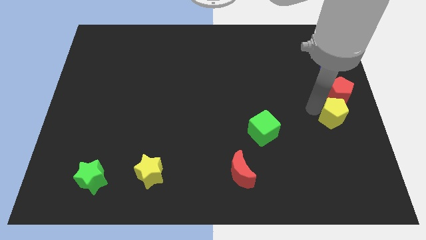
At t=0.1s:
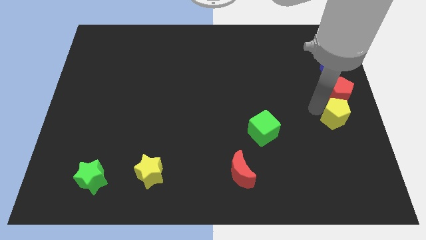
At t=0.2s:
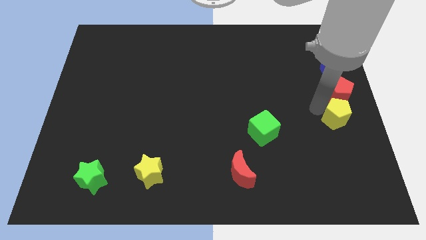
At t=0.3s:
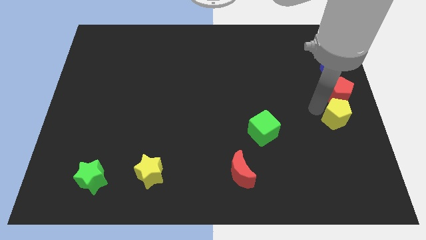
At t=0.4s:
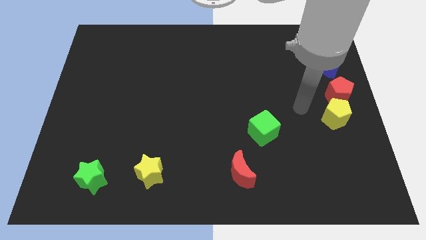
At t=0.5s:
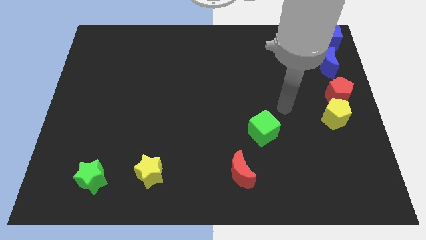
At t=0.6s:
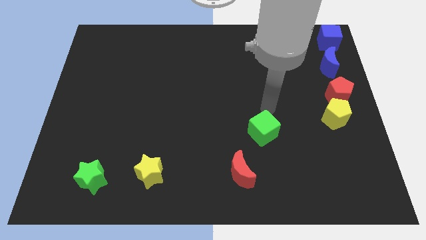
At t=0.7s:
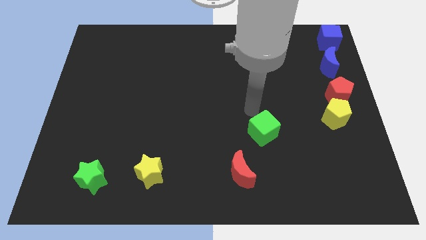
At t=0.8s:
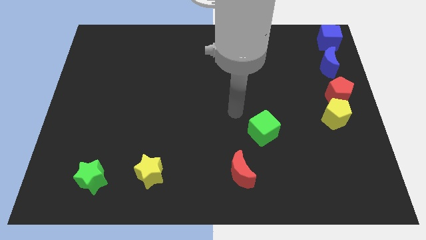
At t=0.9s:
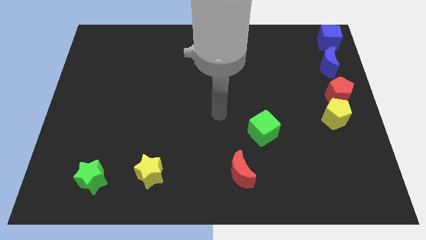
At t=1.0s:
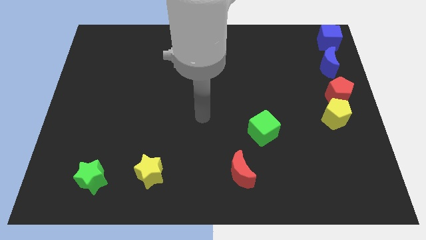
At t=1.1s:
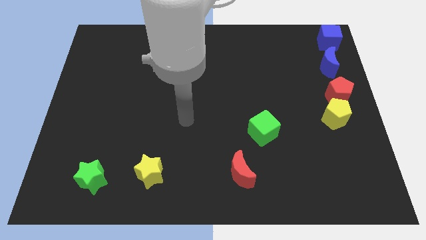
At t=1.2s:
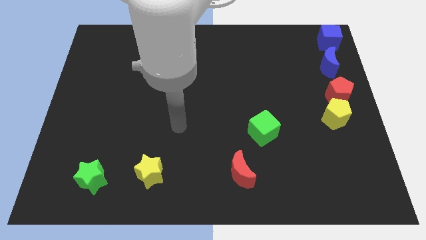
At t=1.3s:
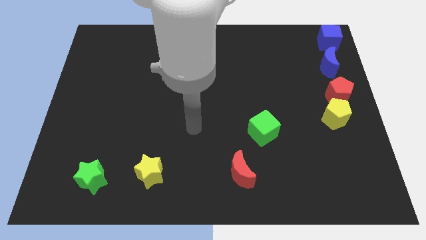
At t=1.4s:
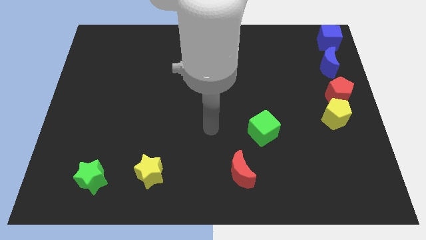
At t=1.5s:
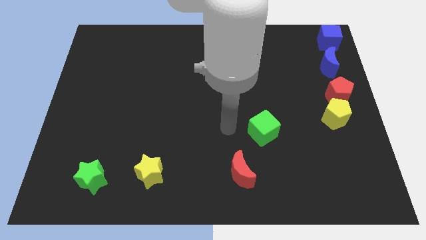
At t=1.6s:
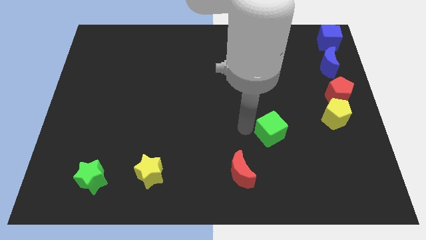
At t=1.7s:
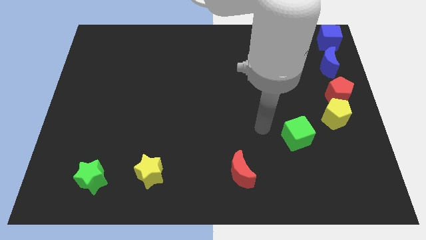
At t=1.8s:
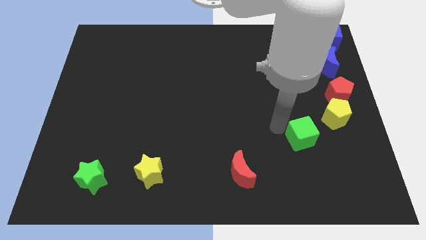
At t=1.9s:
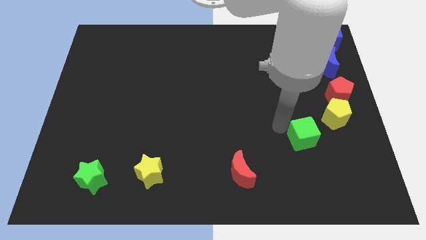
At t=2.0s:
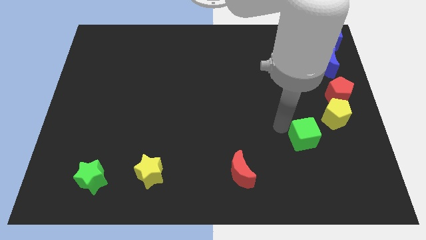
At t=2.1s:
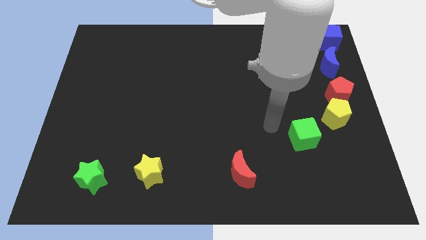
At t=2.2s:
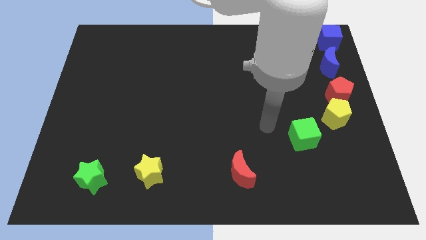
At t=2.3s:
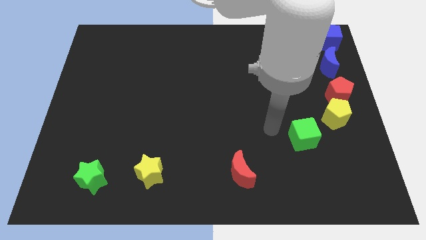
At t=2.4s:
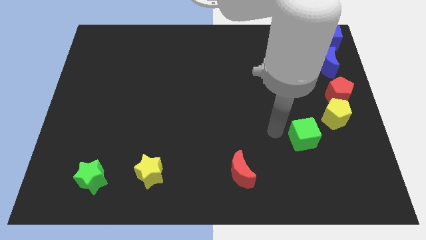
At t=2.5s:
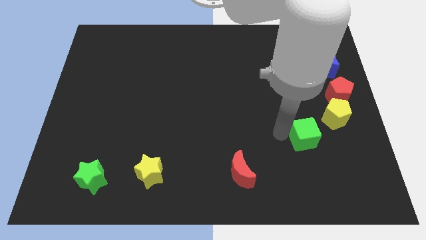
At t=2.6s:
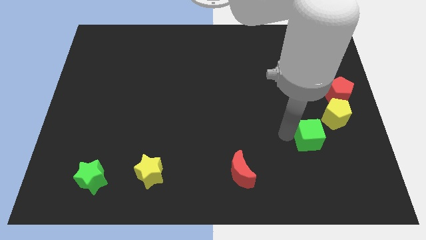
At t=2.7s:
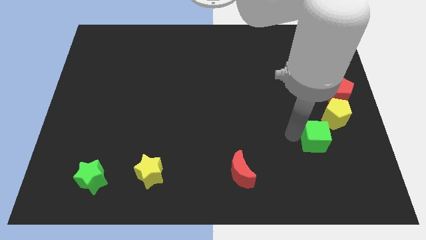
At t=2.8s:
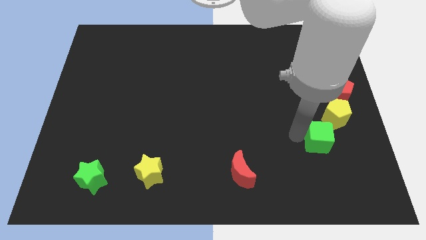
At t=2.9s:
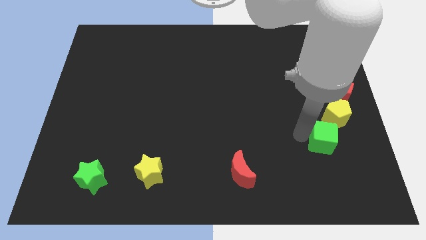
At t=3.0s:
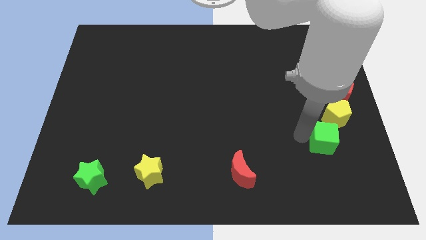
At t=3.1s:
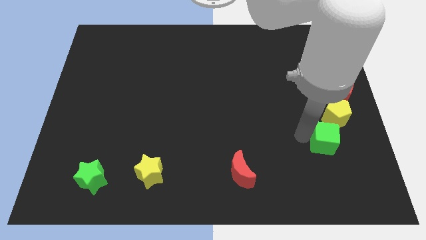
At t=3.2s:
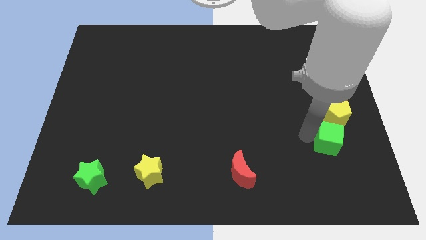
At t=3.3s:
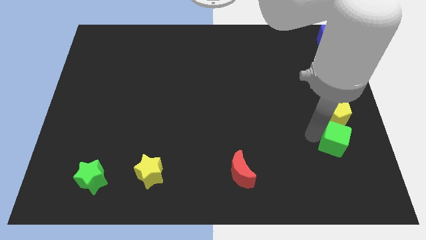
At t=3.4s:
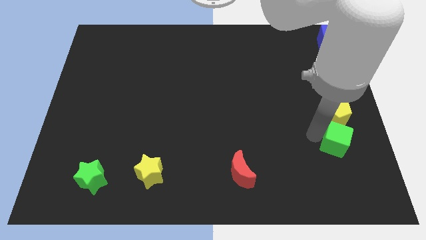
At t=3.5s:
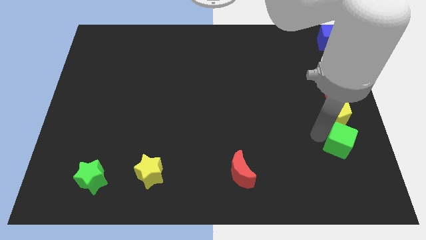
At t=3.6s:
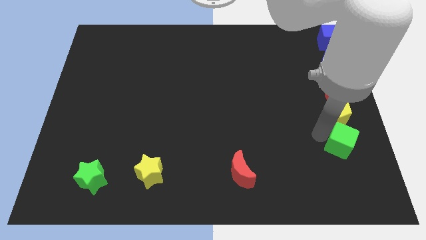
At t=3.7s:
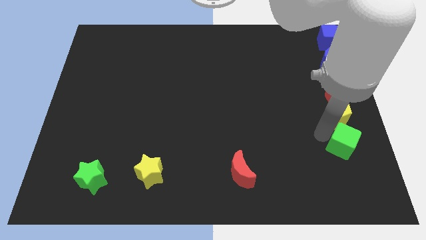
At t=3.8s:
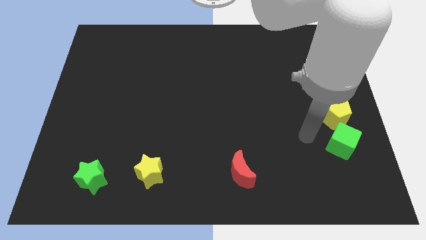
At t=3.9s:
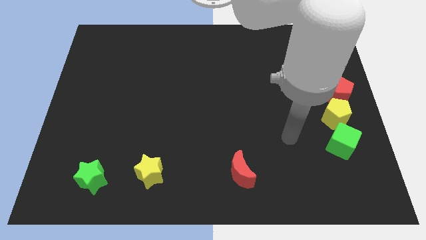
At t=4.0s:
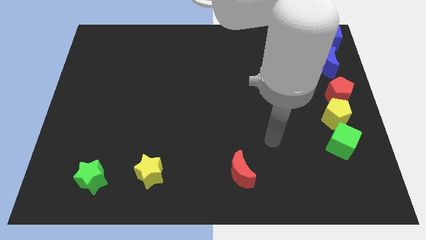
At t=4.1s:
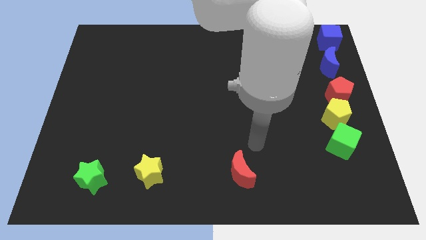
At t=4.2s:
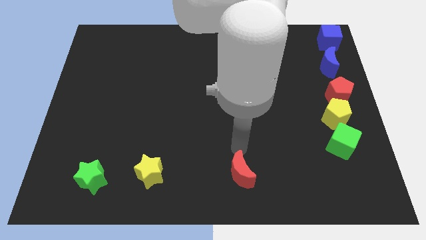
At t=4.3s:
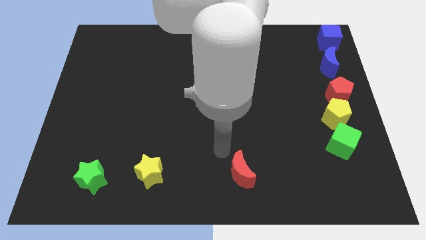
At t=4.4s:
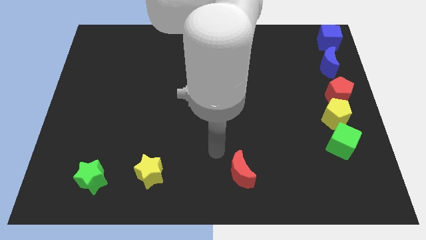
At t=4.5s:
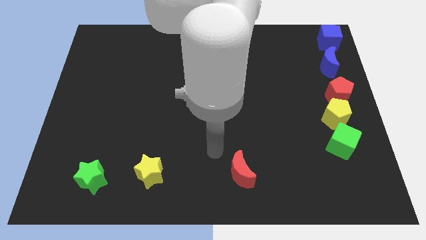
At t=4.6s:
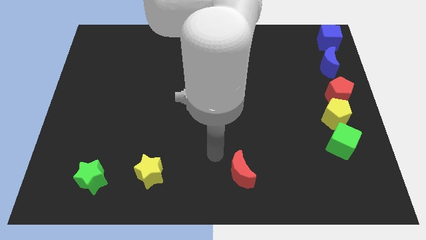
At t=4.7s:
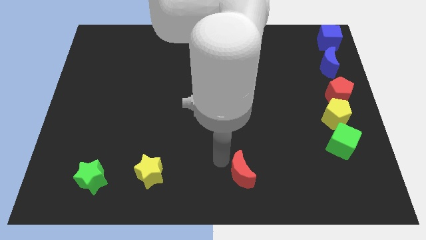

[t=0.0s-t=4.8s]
place the green cube below the yellow pentagon

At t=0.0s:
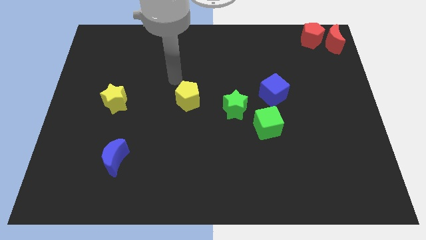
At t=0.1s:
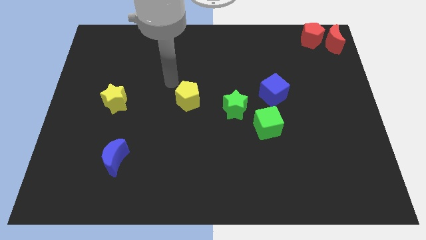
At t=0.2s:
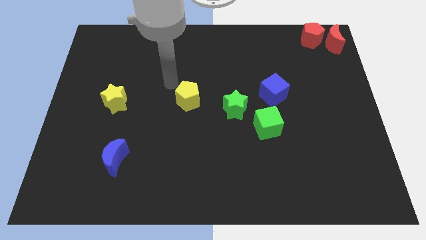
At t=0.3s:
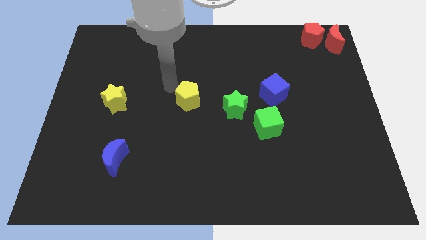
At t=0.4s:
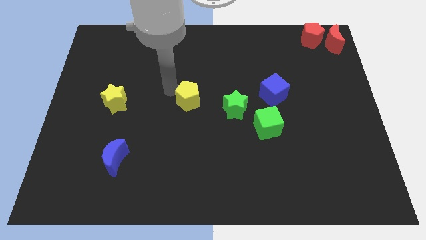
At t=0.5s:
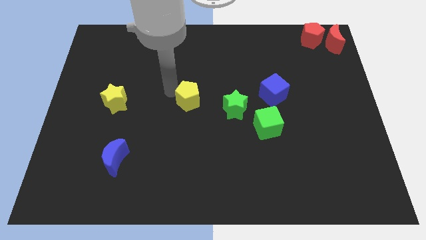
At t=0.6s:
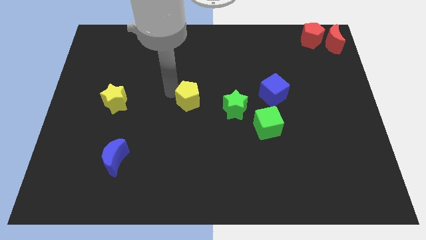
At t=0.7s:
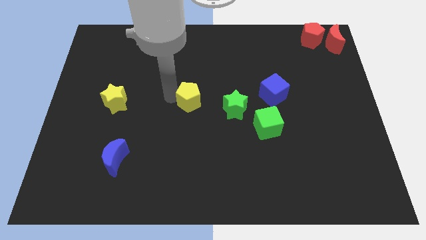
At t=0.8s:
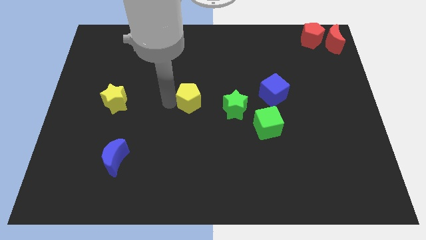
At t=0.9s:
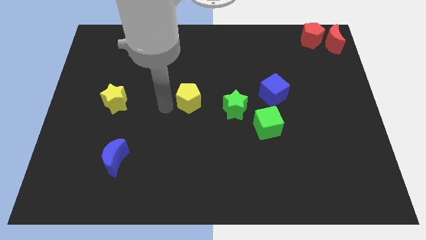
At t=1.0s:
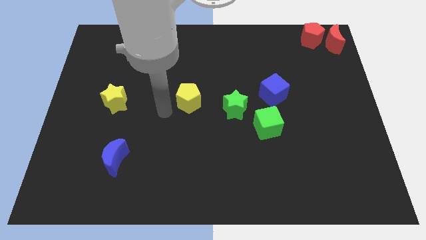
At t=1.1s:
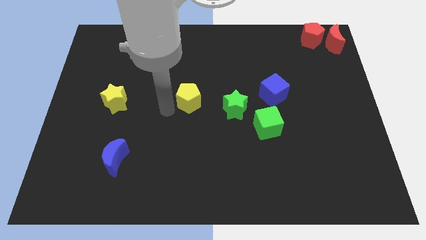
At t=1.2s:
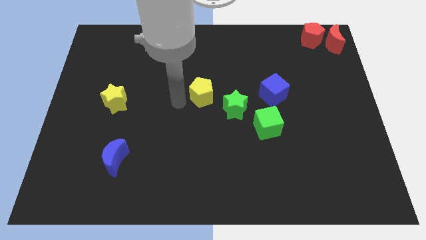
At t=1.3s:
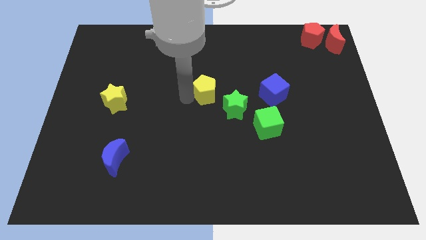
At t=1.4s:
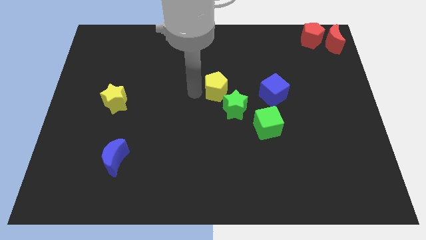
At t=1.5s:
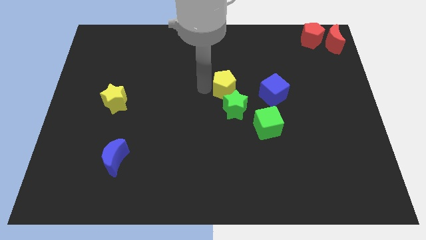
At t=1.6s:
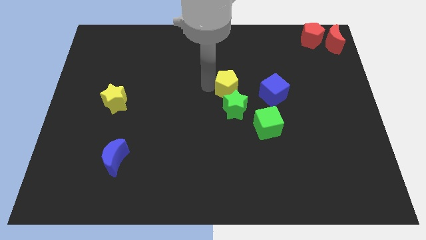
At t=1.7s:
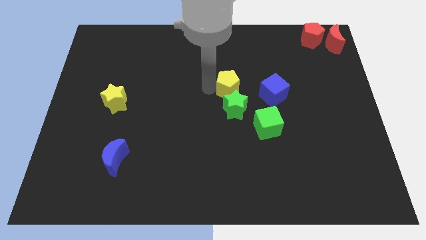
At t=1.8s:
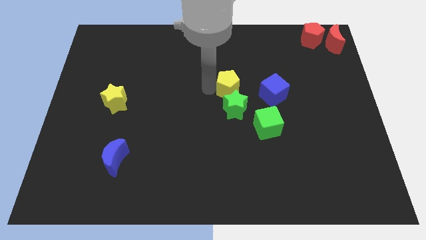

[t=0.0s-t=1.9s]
move the yellow pentagon above the green star

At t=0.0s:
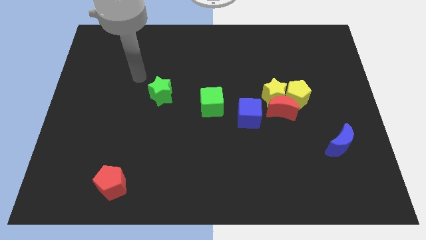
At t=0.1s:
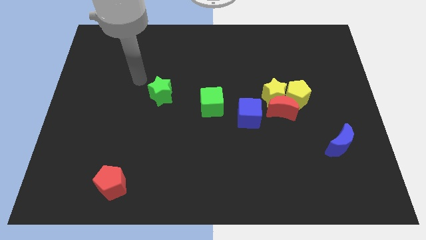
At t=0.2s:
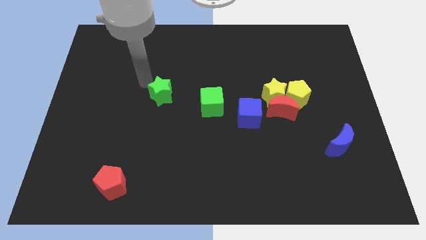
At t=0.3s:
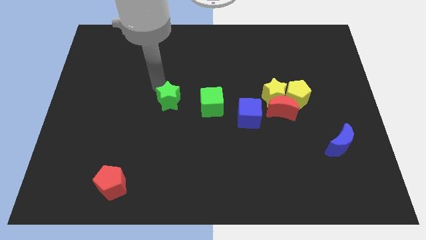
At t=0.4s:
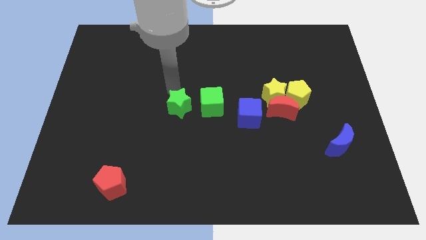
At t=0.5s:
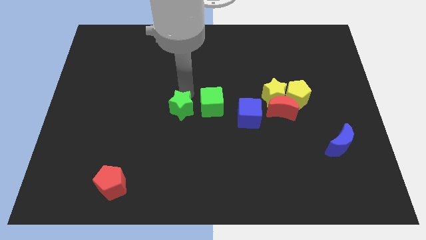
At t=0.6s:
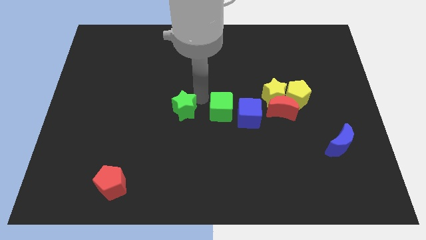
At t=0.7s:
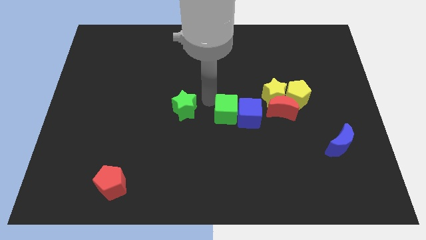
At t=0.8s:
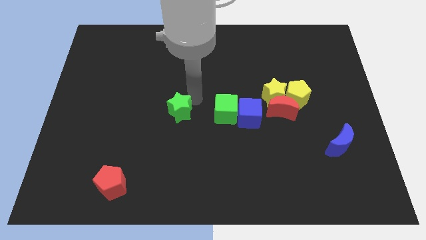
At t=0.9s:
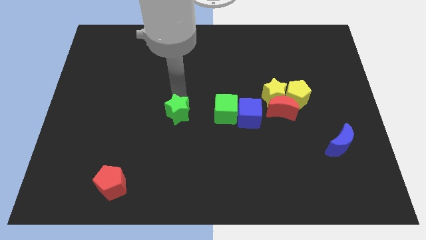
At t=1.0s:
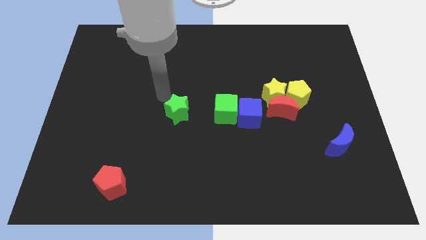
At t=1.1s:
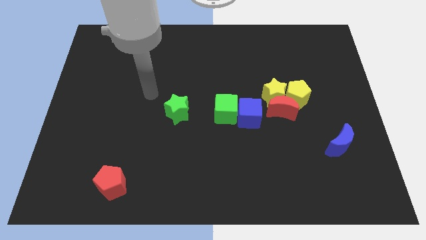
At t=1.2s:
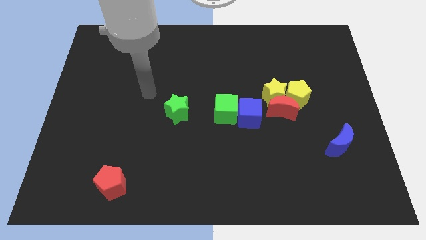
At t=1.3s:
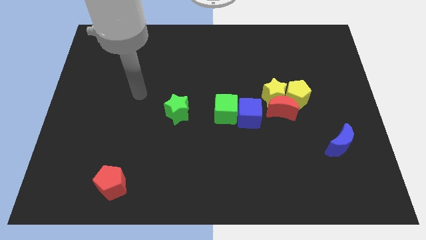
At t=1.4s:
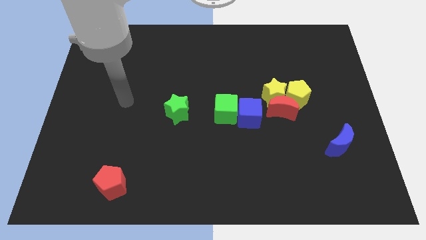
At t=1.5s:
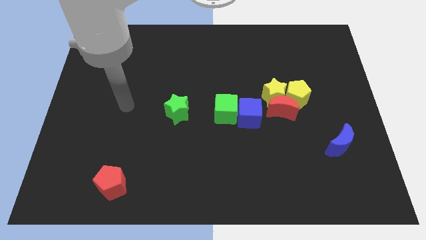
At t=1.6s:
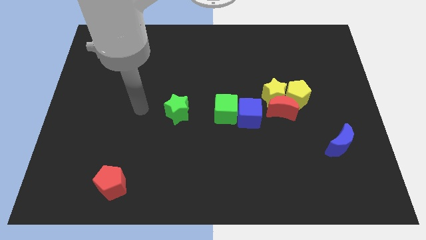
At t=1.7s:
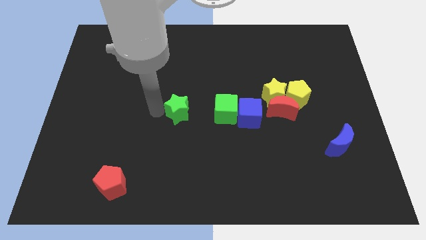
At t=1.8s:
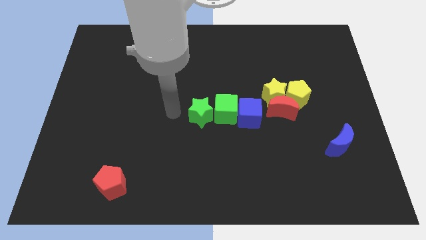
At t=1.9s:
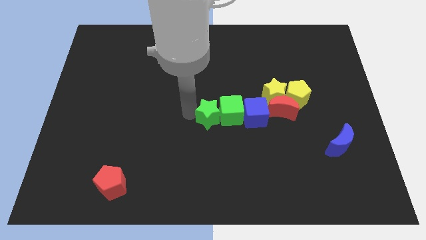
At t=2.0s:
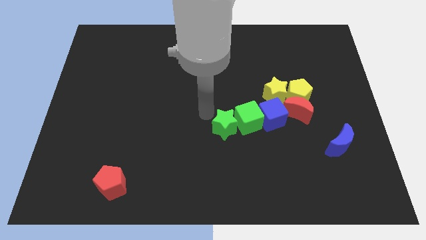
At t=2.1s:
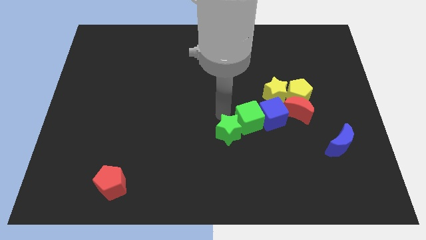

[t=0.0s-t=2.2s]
move green star close to green cube

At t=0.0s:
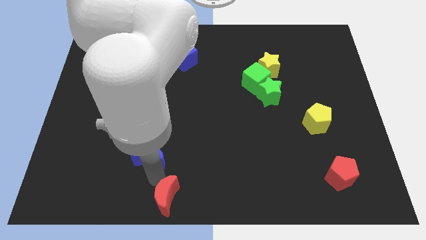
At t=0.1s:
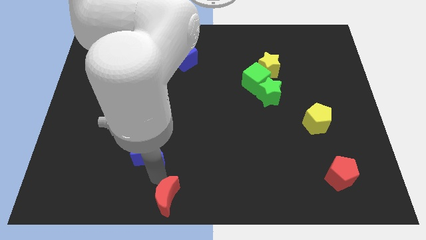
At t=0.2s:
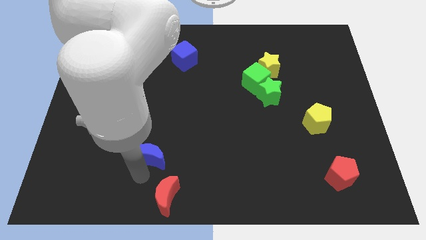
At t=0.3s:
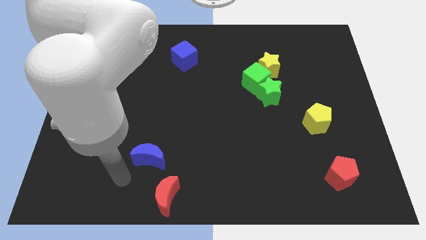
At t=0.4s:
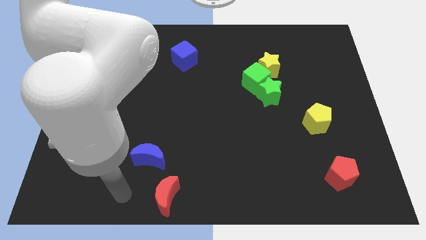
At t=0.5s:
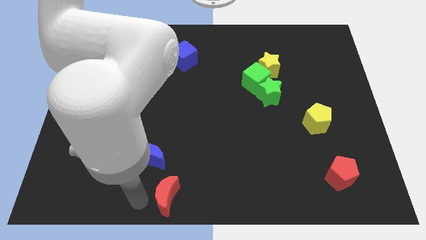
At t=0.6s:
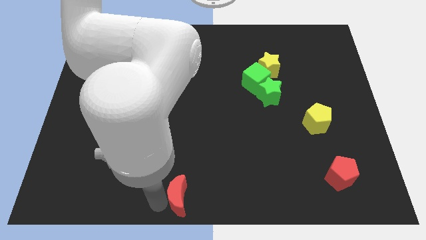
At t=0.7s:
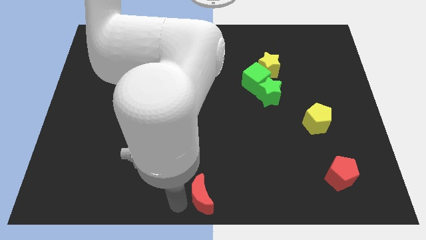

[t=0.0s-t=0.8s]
place red crescent at the bottom center
